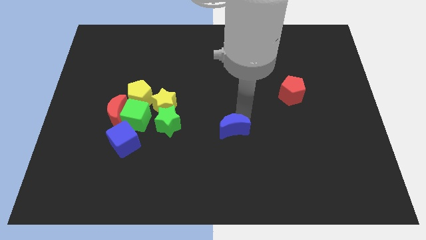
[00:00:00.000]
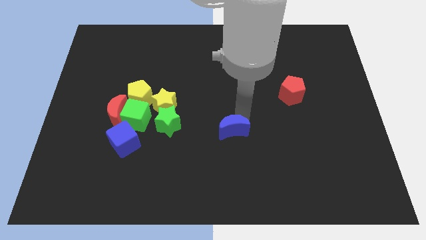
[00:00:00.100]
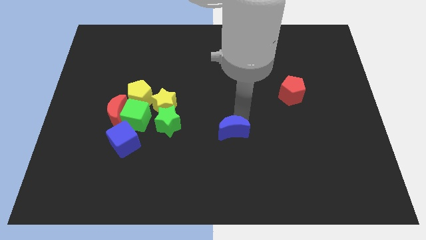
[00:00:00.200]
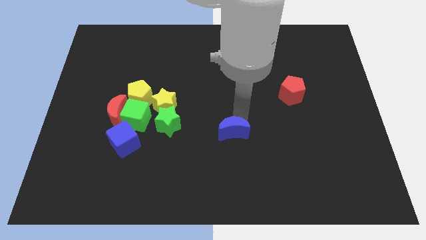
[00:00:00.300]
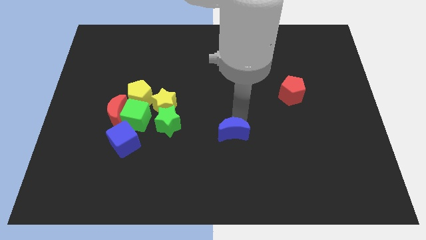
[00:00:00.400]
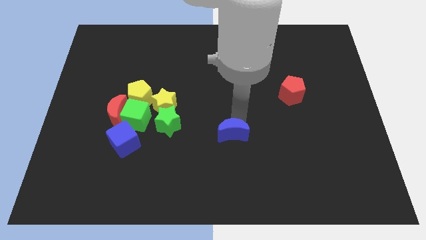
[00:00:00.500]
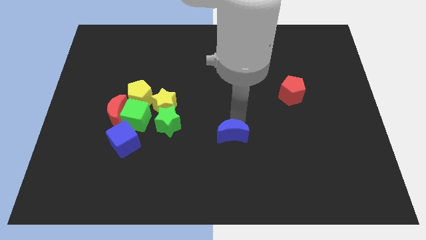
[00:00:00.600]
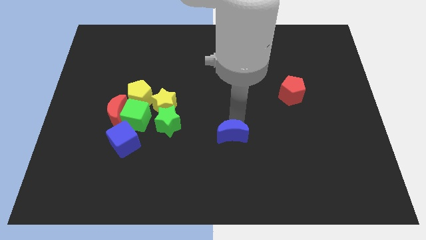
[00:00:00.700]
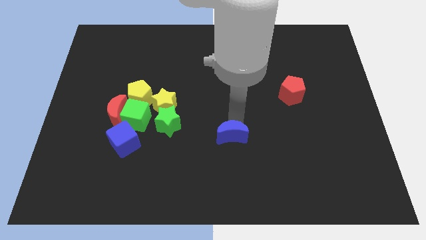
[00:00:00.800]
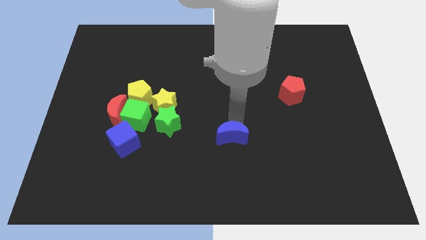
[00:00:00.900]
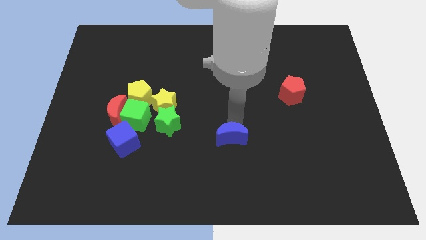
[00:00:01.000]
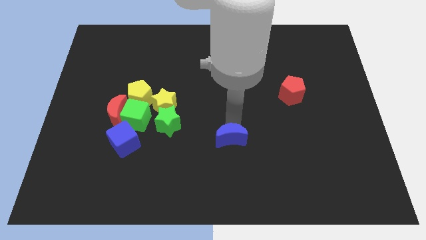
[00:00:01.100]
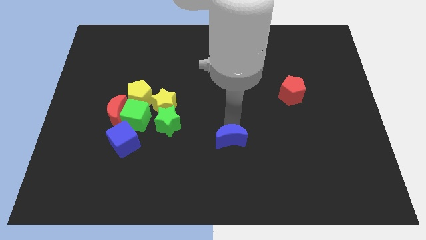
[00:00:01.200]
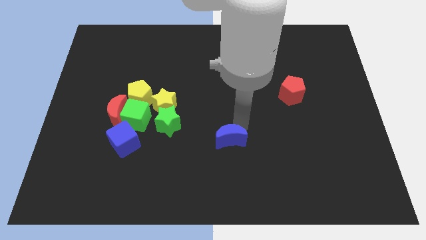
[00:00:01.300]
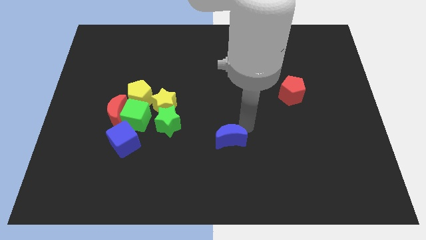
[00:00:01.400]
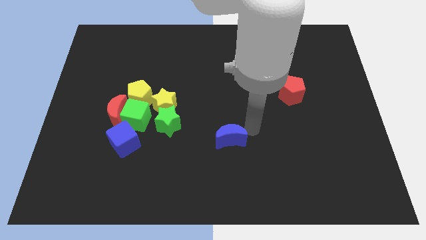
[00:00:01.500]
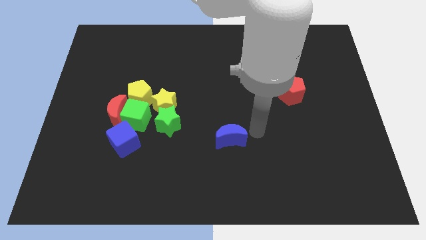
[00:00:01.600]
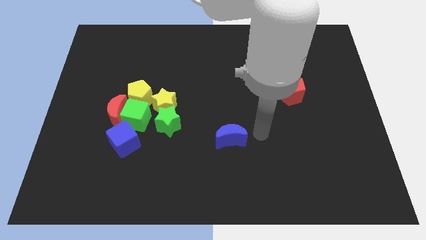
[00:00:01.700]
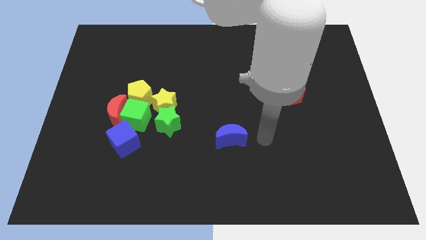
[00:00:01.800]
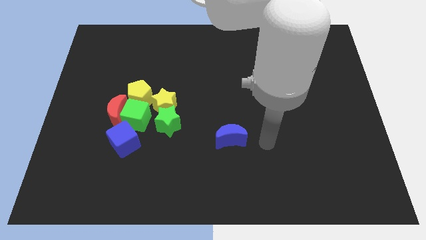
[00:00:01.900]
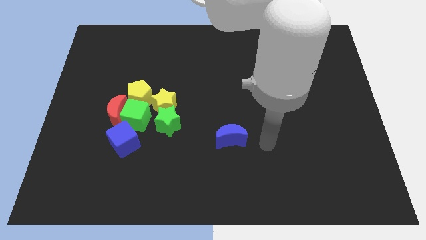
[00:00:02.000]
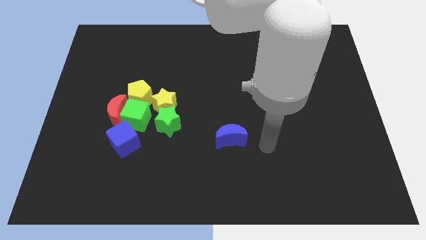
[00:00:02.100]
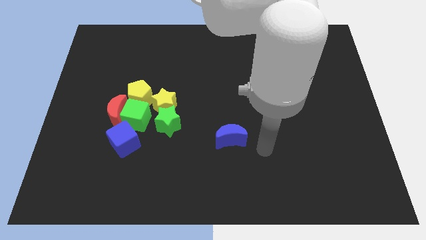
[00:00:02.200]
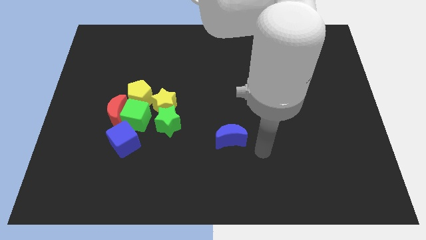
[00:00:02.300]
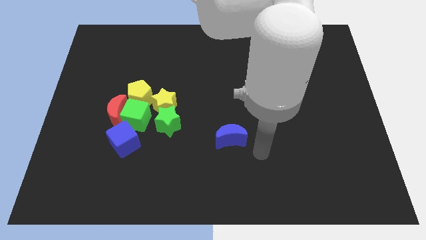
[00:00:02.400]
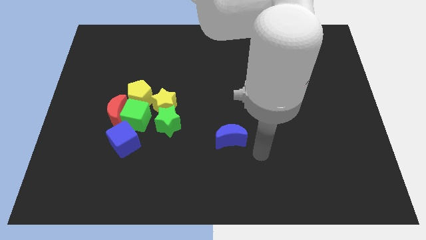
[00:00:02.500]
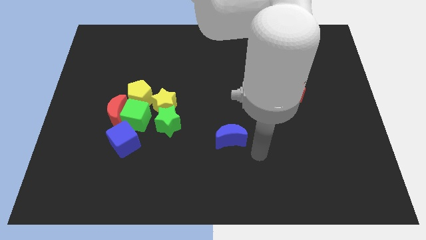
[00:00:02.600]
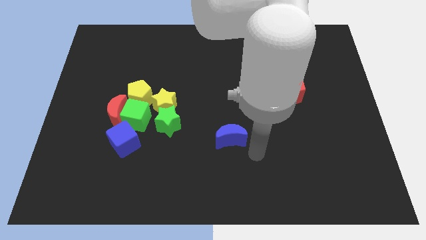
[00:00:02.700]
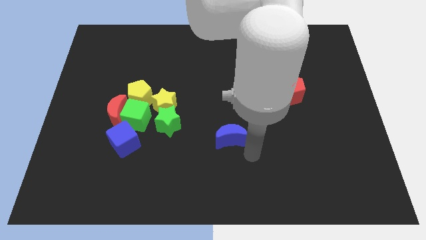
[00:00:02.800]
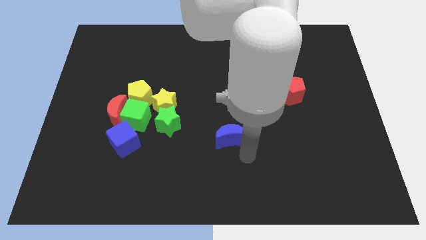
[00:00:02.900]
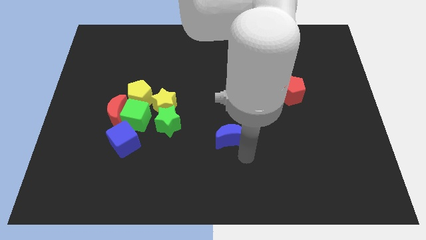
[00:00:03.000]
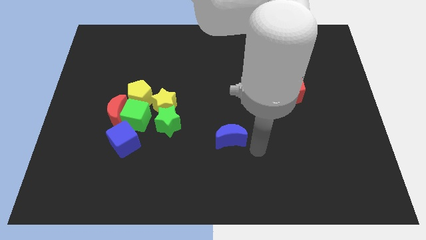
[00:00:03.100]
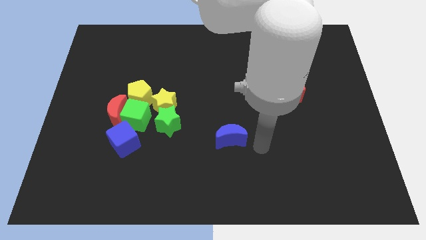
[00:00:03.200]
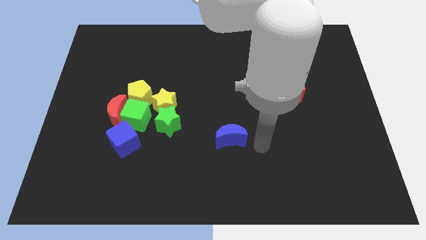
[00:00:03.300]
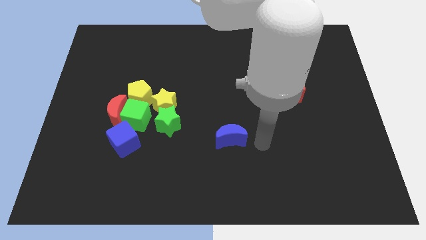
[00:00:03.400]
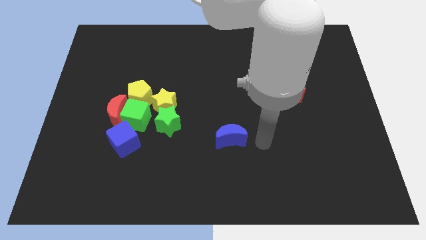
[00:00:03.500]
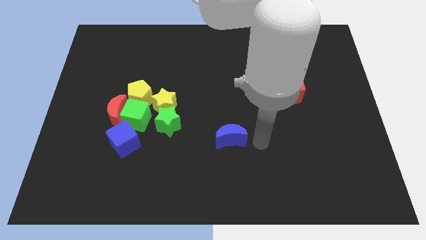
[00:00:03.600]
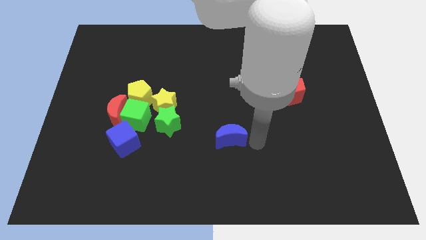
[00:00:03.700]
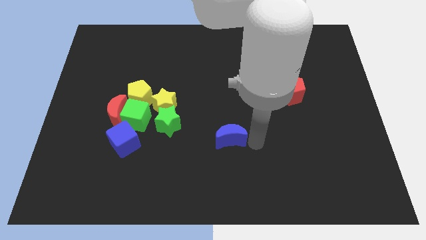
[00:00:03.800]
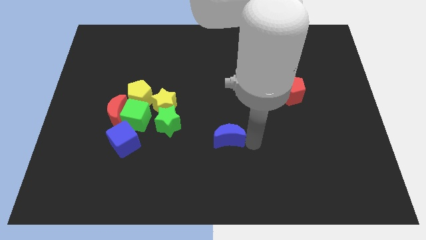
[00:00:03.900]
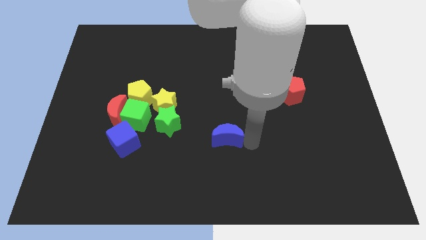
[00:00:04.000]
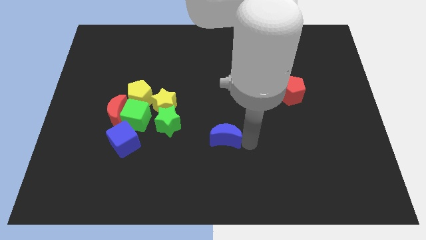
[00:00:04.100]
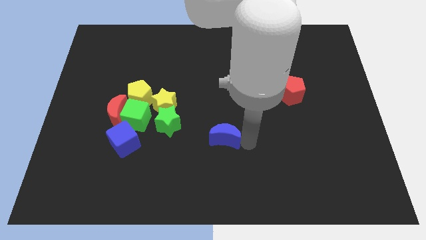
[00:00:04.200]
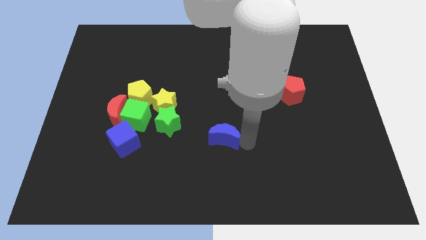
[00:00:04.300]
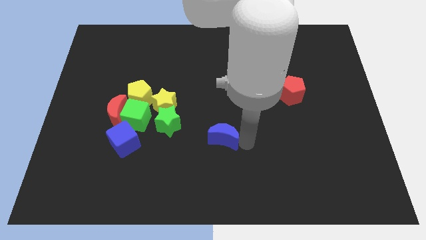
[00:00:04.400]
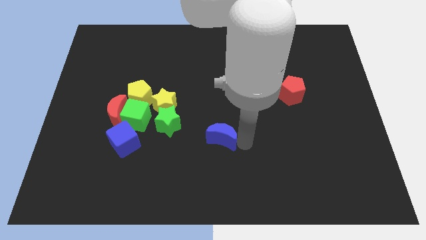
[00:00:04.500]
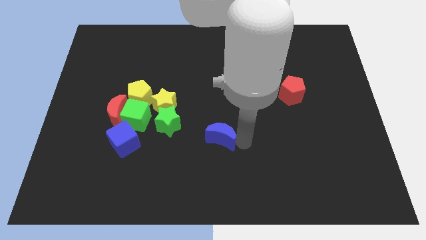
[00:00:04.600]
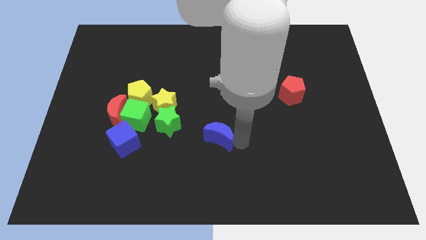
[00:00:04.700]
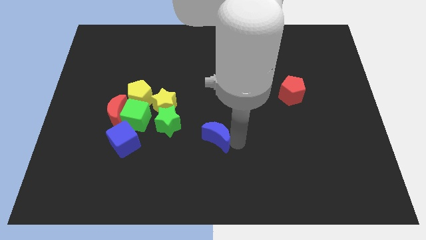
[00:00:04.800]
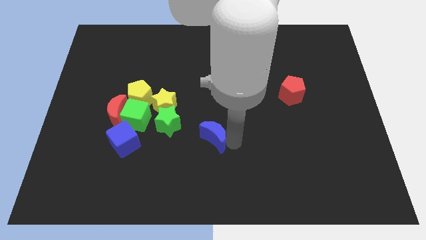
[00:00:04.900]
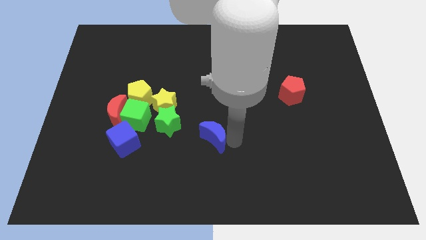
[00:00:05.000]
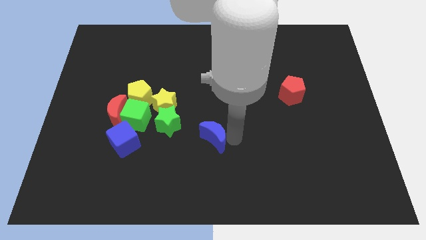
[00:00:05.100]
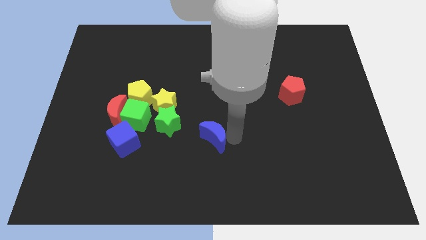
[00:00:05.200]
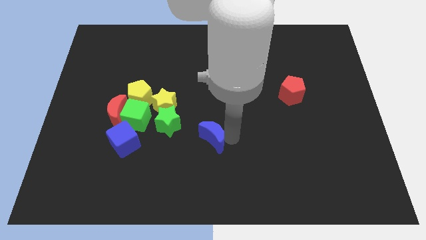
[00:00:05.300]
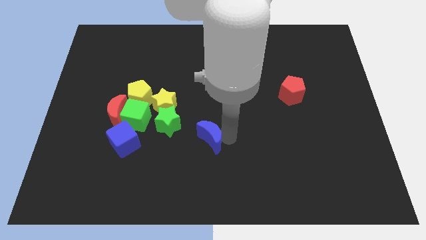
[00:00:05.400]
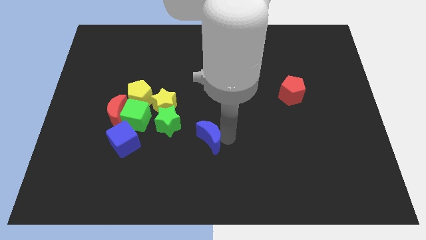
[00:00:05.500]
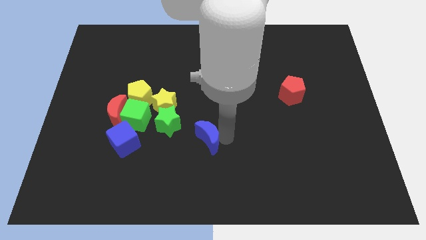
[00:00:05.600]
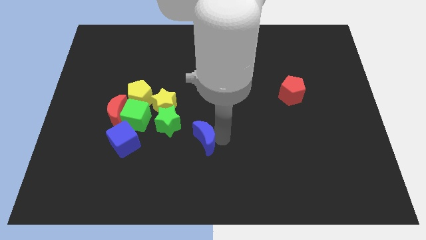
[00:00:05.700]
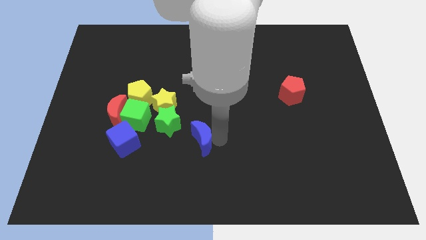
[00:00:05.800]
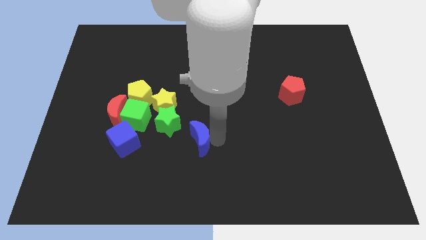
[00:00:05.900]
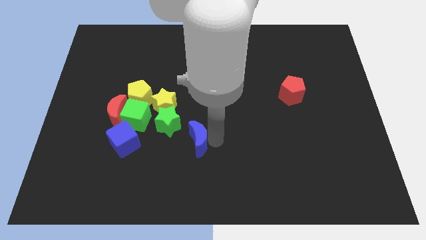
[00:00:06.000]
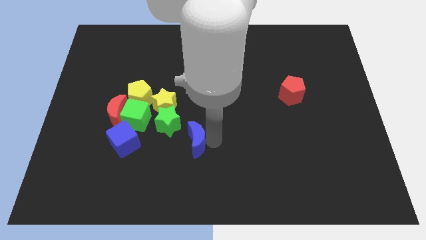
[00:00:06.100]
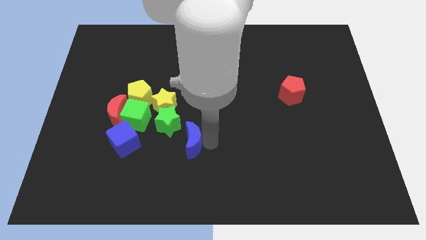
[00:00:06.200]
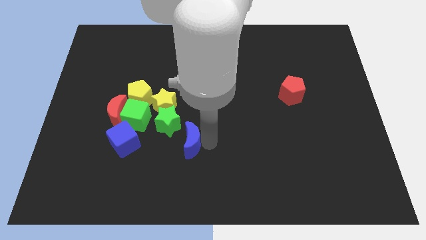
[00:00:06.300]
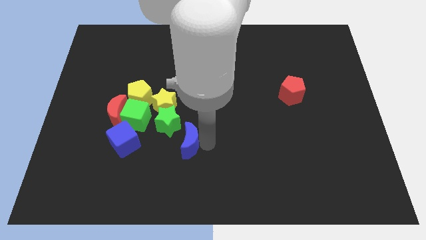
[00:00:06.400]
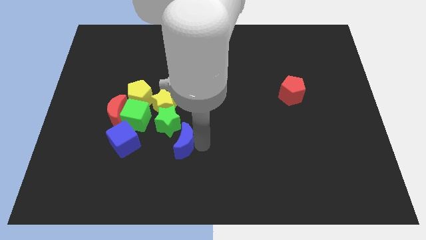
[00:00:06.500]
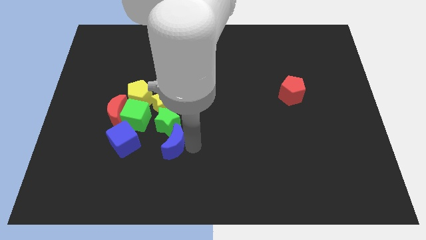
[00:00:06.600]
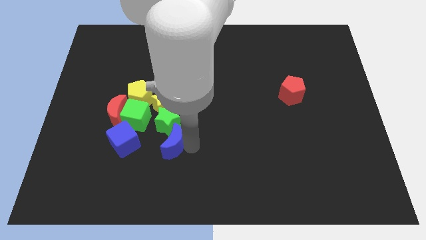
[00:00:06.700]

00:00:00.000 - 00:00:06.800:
move the blue crescent to the group of blocks

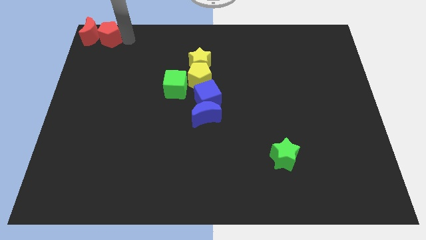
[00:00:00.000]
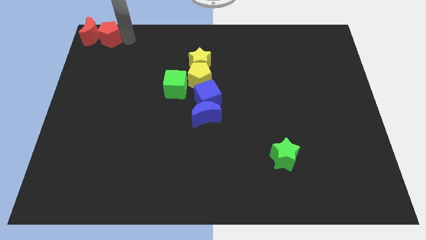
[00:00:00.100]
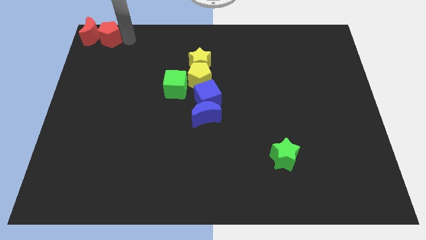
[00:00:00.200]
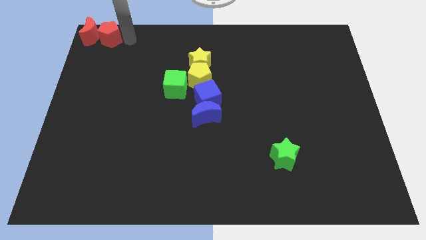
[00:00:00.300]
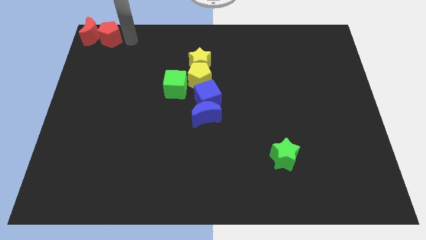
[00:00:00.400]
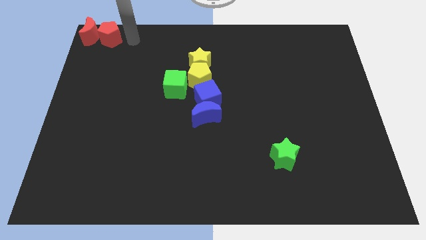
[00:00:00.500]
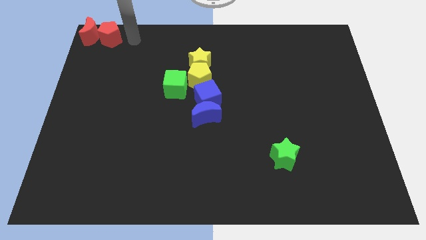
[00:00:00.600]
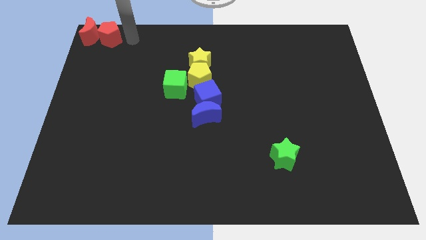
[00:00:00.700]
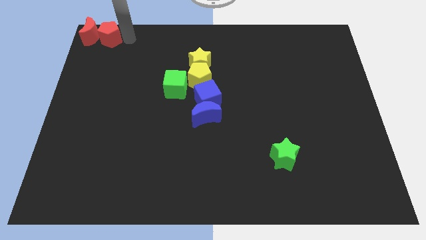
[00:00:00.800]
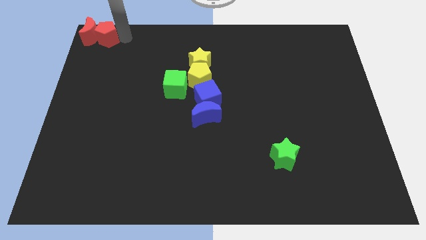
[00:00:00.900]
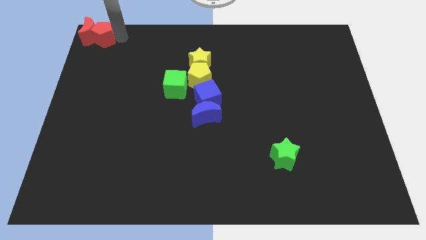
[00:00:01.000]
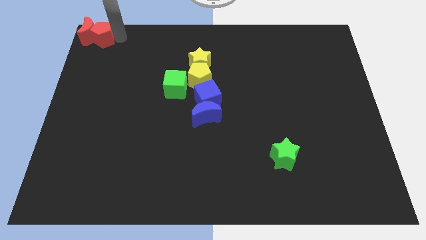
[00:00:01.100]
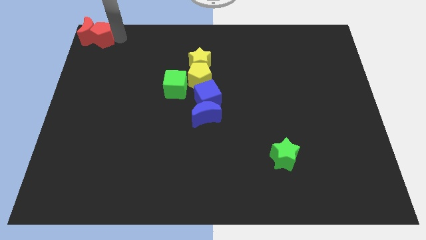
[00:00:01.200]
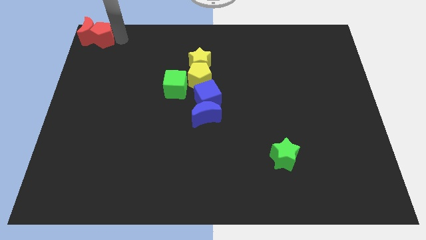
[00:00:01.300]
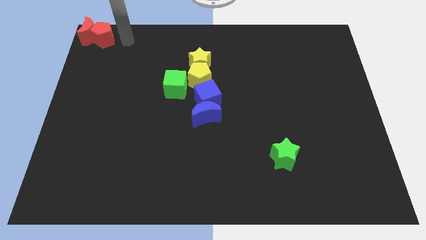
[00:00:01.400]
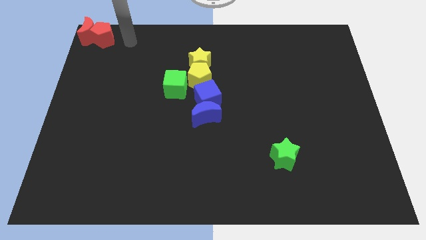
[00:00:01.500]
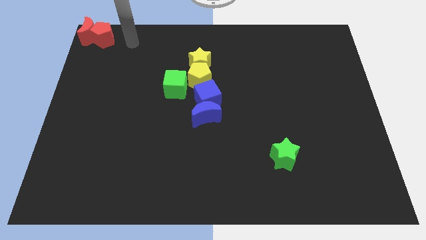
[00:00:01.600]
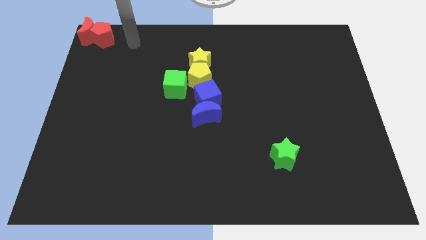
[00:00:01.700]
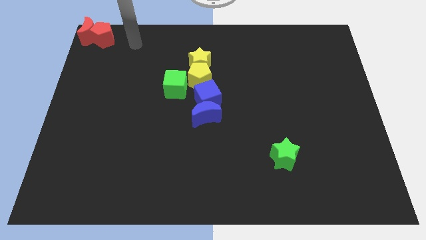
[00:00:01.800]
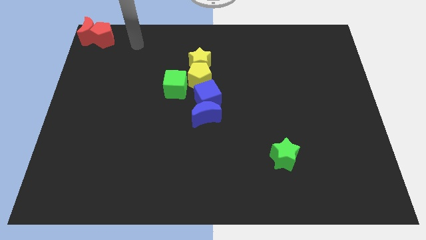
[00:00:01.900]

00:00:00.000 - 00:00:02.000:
move the red pentagon and red crescent to the top left corner

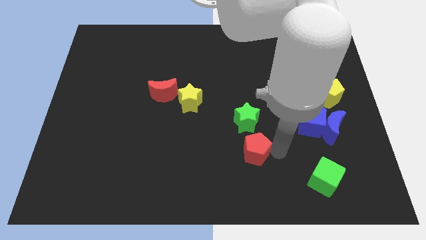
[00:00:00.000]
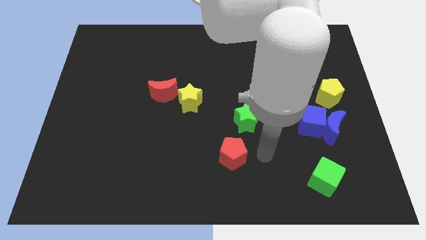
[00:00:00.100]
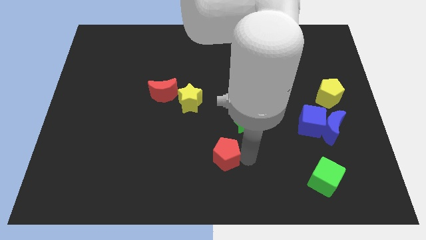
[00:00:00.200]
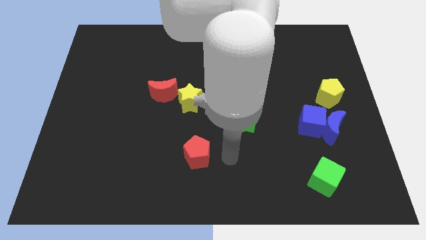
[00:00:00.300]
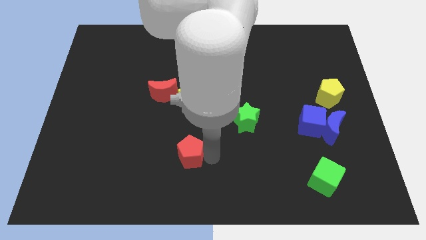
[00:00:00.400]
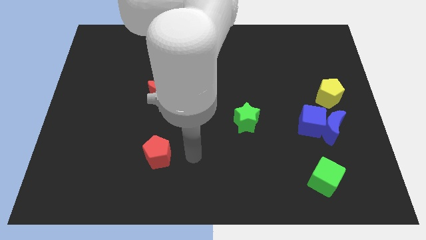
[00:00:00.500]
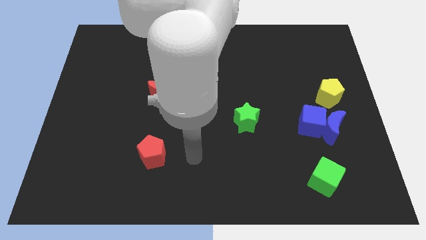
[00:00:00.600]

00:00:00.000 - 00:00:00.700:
move the red pentagon left to the board
